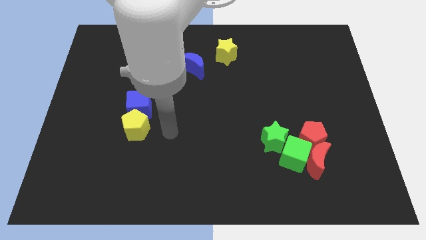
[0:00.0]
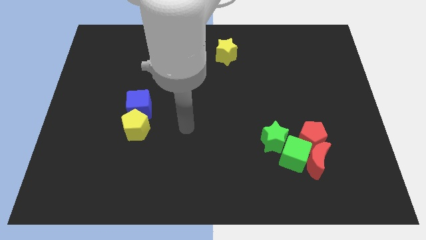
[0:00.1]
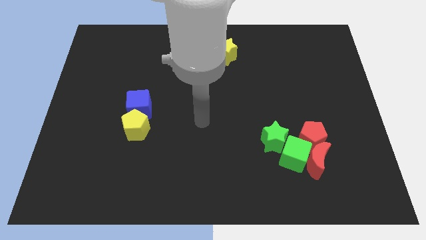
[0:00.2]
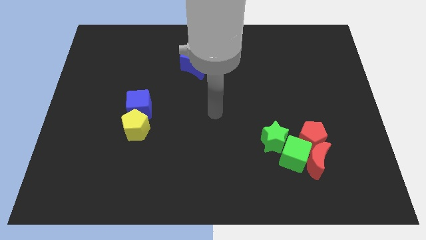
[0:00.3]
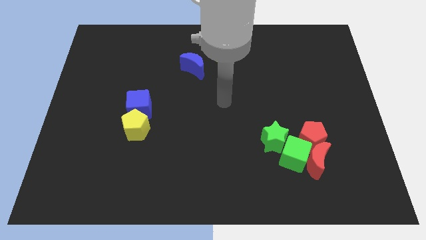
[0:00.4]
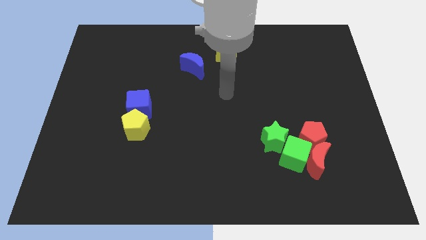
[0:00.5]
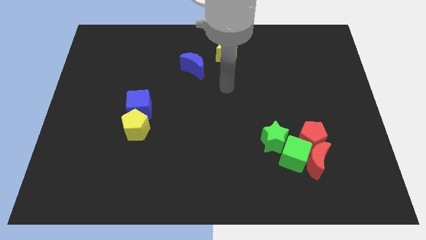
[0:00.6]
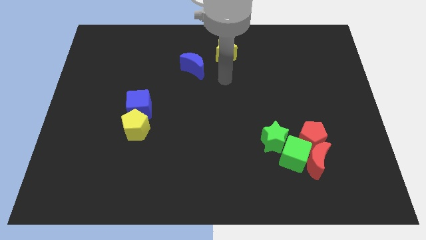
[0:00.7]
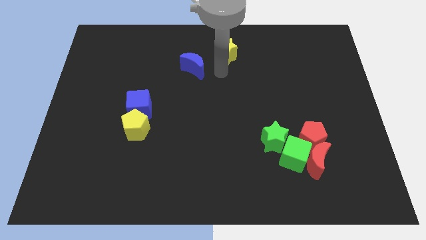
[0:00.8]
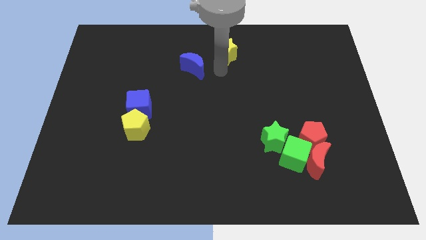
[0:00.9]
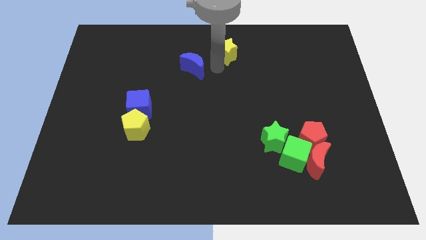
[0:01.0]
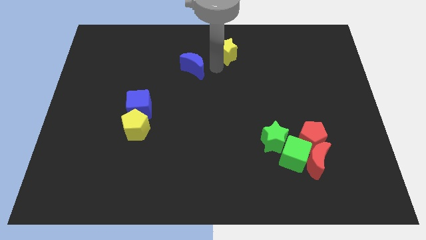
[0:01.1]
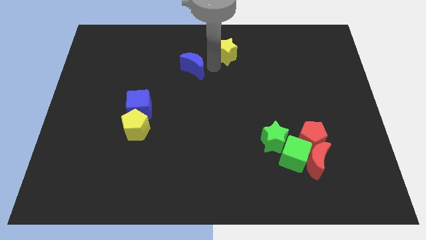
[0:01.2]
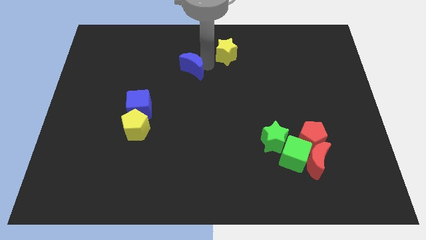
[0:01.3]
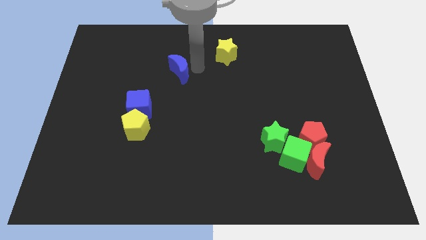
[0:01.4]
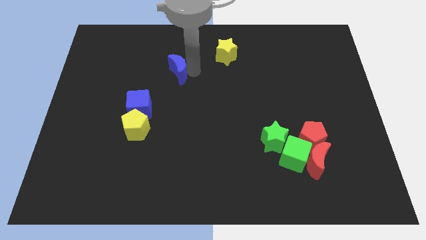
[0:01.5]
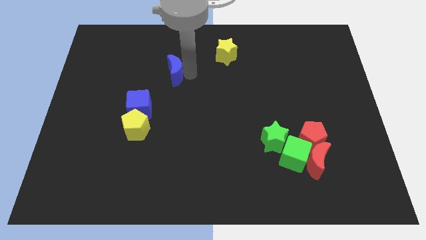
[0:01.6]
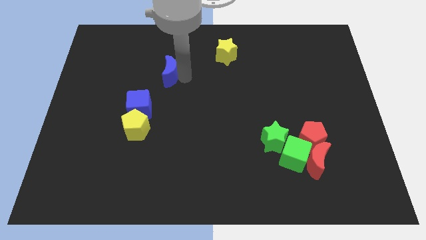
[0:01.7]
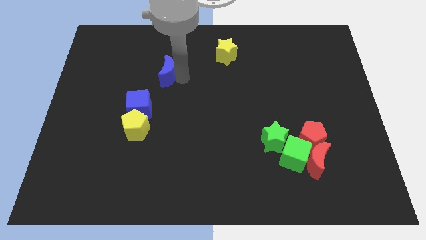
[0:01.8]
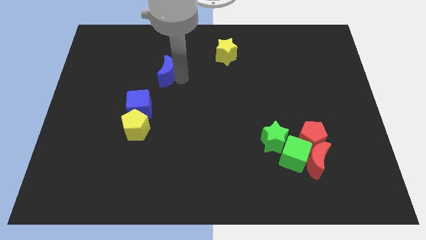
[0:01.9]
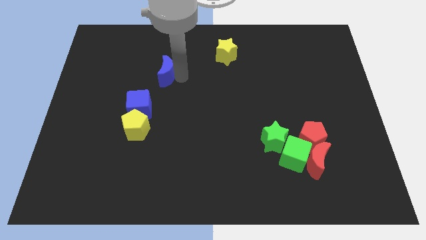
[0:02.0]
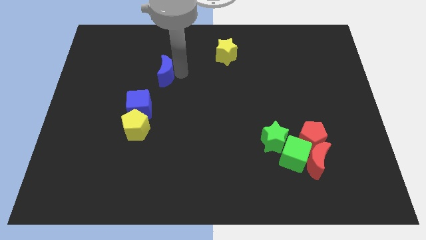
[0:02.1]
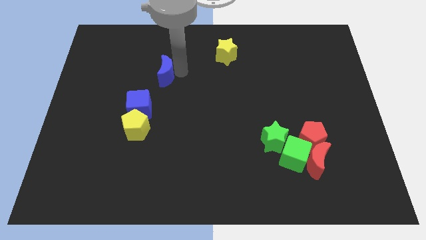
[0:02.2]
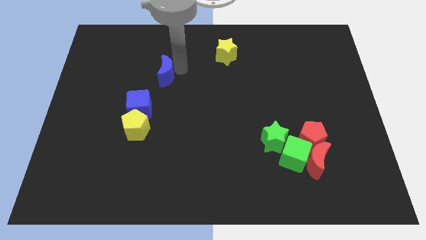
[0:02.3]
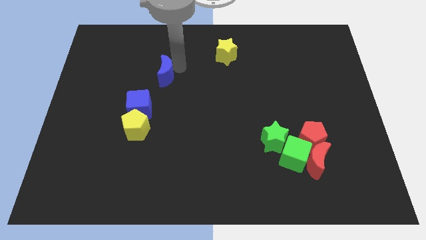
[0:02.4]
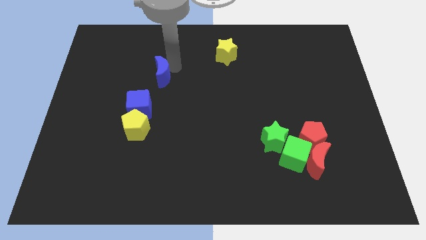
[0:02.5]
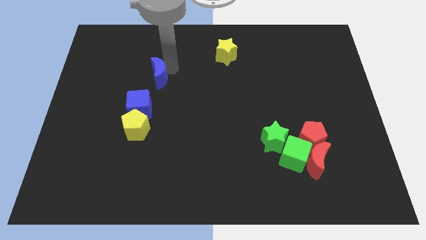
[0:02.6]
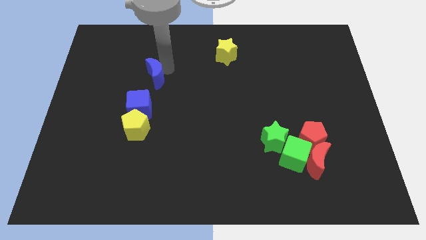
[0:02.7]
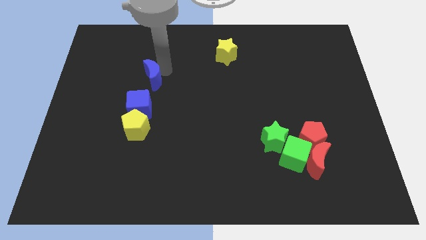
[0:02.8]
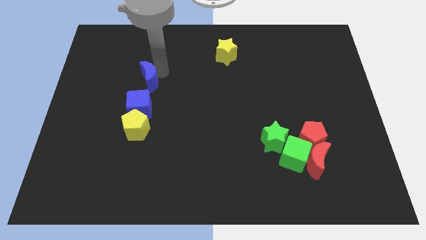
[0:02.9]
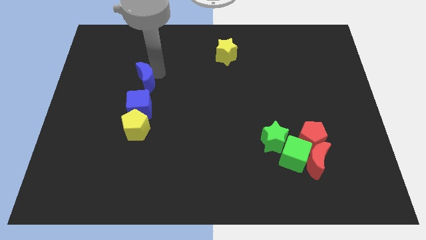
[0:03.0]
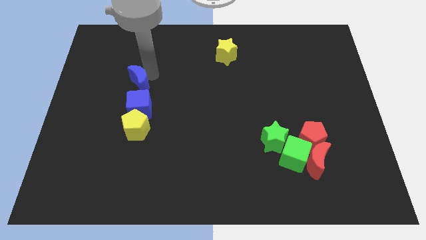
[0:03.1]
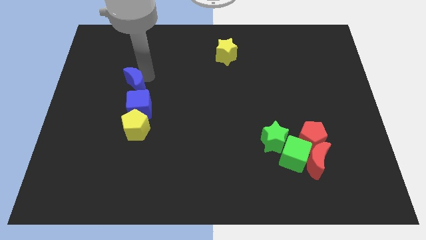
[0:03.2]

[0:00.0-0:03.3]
move the blue crescent above the blue cube

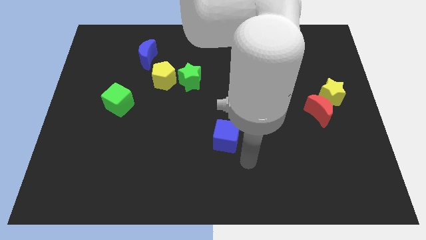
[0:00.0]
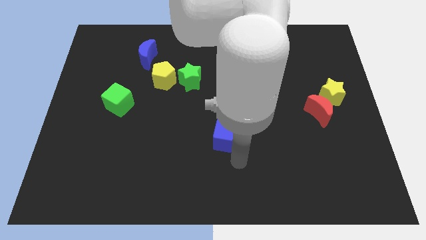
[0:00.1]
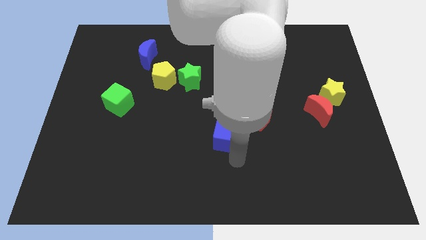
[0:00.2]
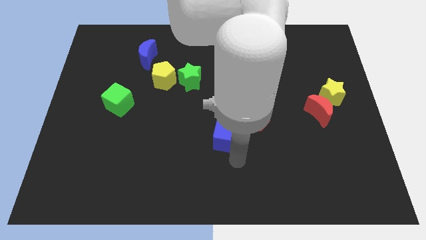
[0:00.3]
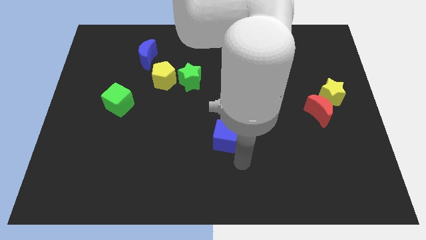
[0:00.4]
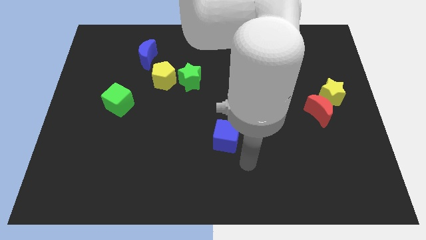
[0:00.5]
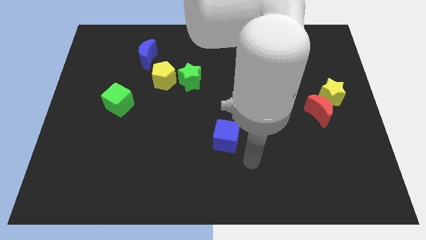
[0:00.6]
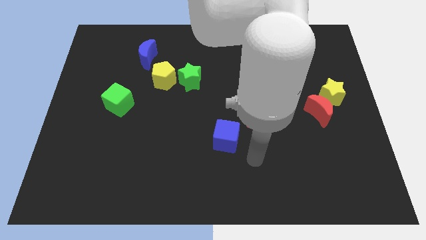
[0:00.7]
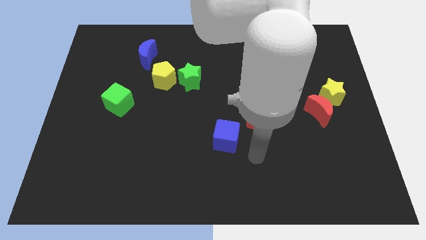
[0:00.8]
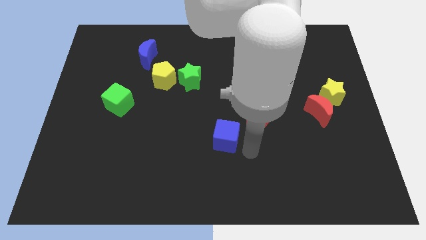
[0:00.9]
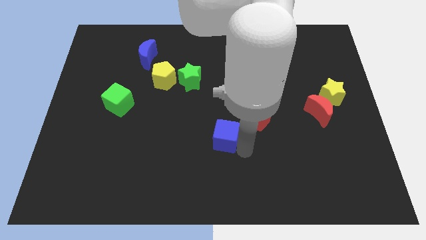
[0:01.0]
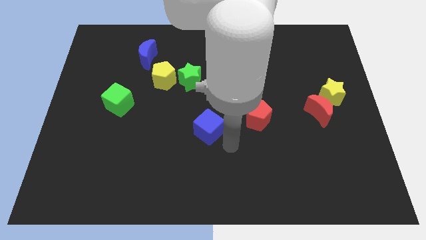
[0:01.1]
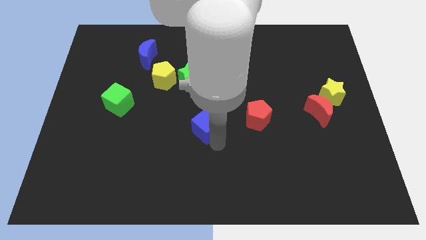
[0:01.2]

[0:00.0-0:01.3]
move blue cube slightly up

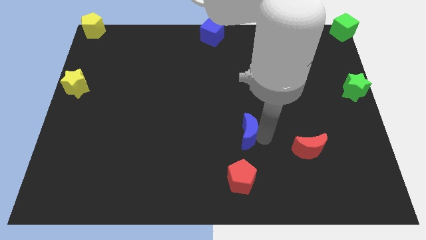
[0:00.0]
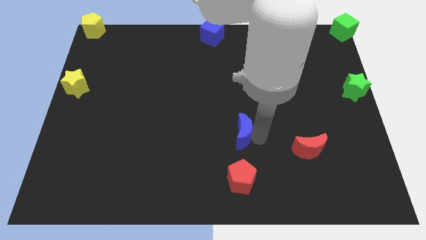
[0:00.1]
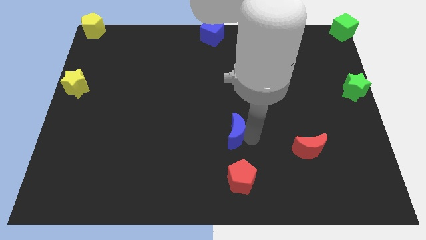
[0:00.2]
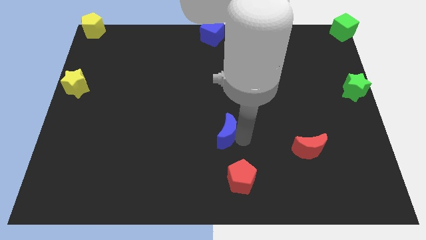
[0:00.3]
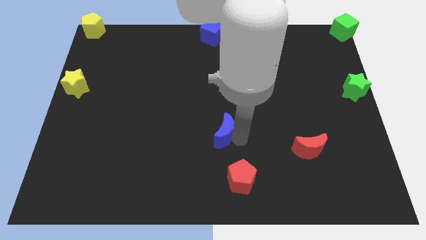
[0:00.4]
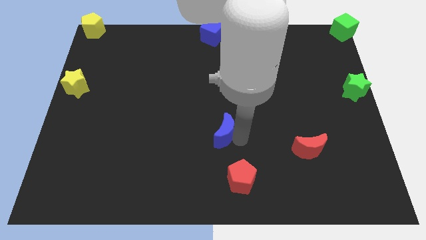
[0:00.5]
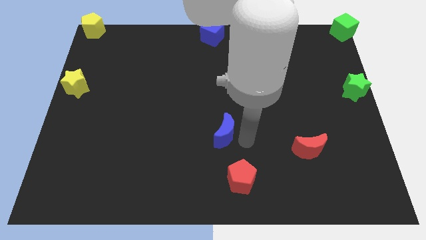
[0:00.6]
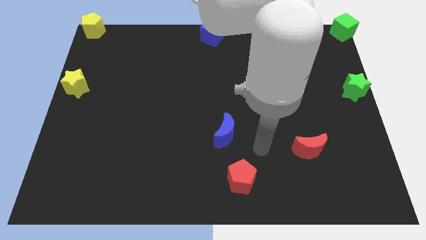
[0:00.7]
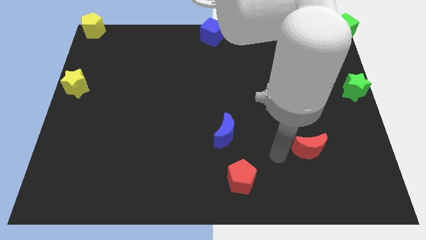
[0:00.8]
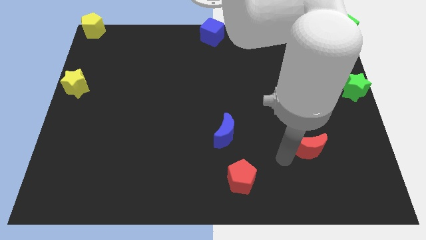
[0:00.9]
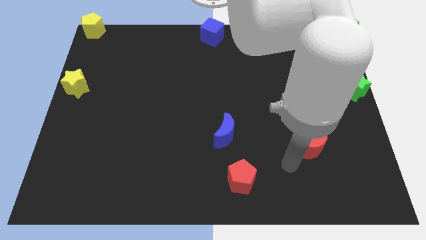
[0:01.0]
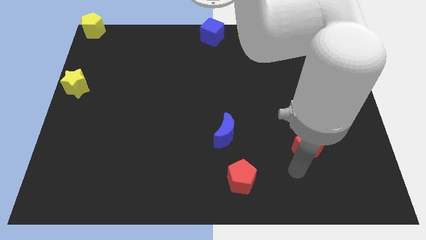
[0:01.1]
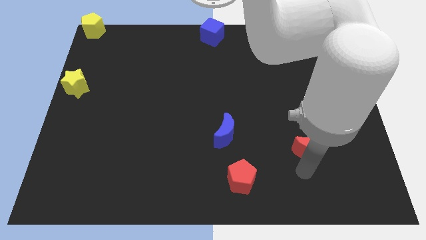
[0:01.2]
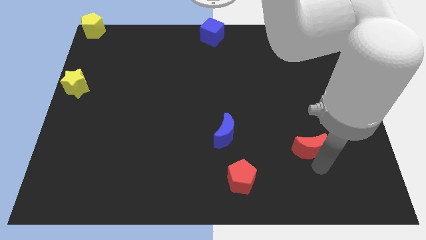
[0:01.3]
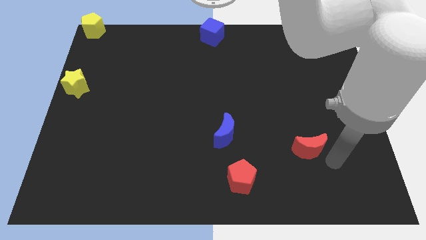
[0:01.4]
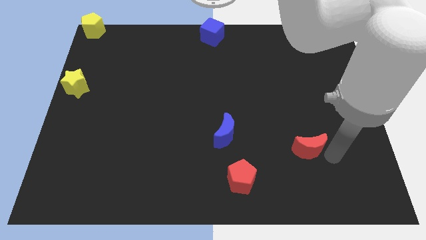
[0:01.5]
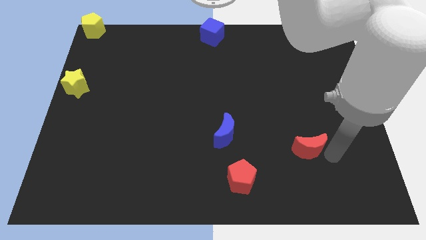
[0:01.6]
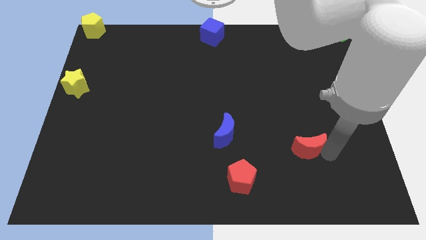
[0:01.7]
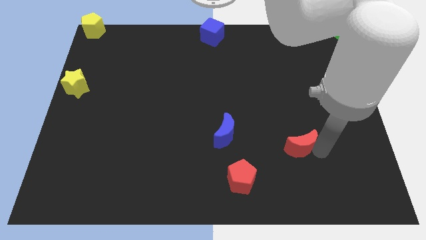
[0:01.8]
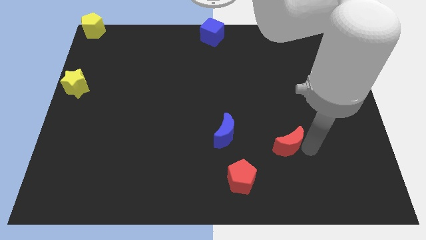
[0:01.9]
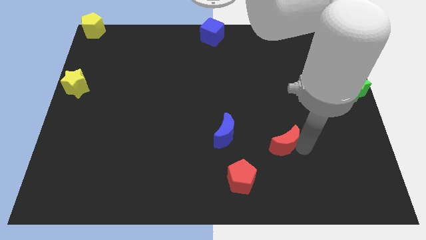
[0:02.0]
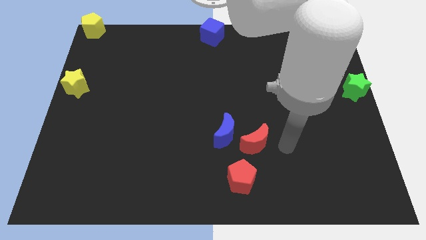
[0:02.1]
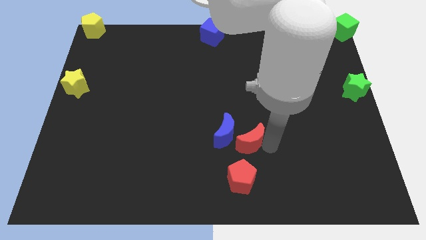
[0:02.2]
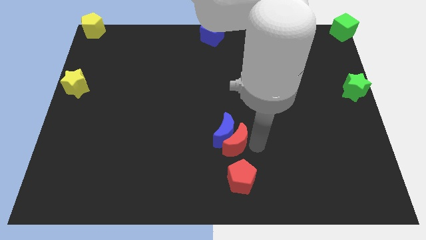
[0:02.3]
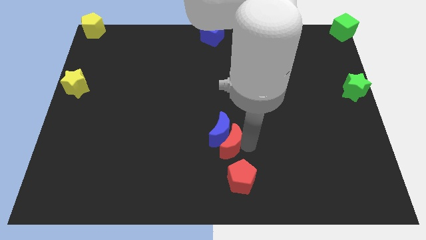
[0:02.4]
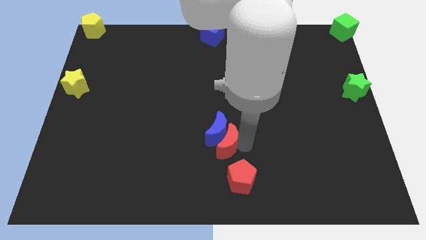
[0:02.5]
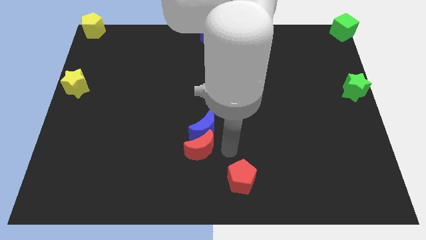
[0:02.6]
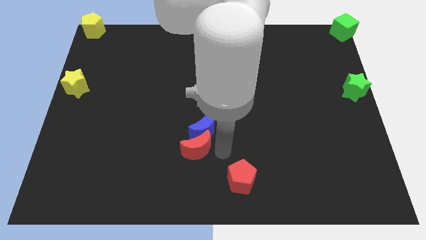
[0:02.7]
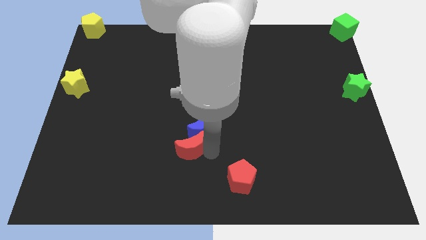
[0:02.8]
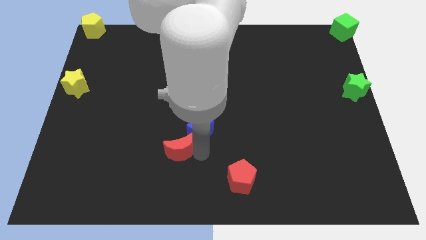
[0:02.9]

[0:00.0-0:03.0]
move the red moon close to the blue moon

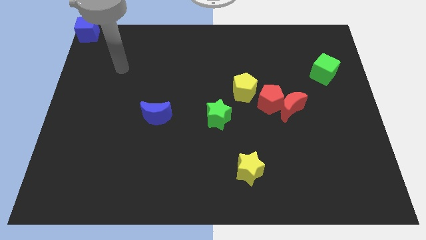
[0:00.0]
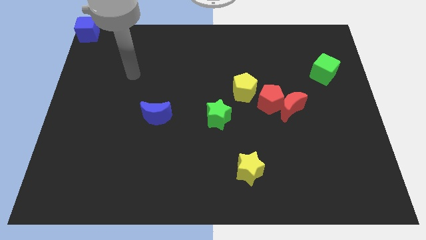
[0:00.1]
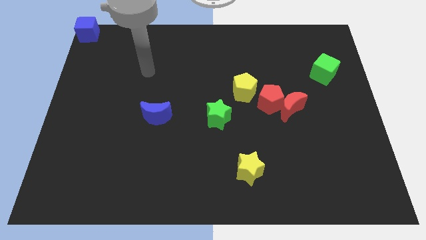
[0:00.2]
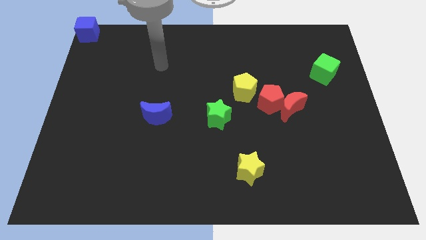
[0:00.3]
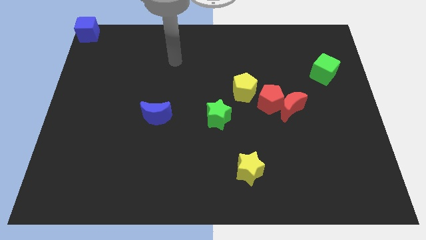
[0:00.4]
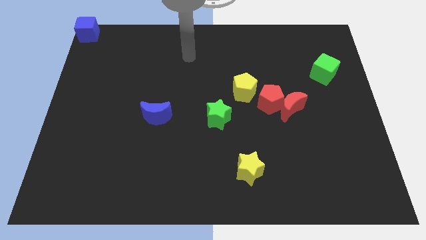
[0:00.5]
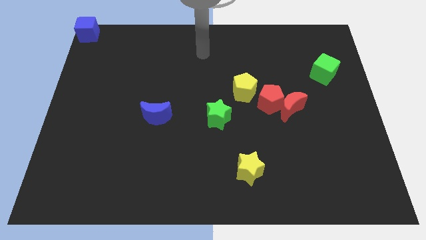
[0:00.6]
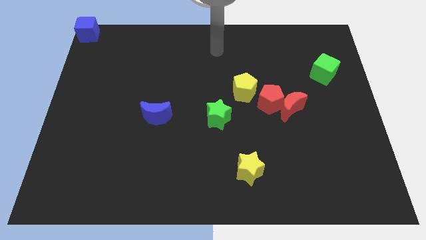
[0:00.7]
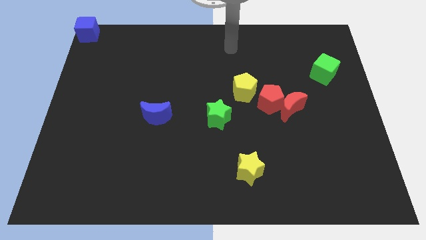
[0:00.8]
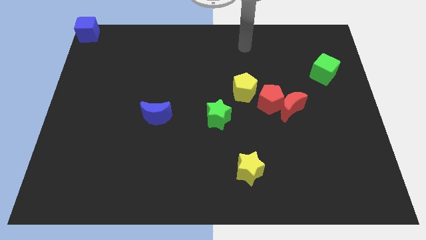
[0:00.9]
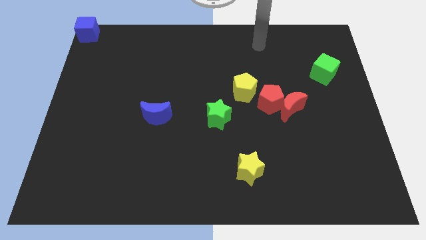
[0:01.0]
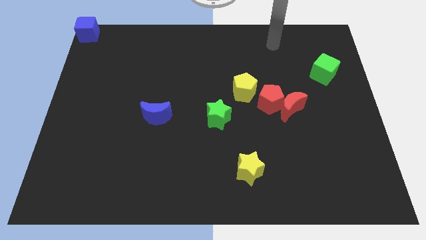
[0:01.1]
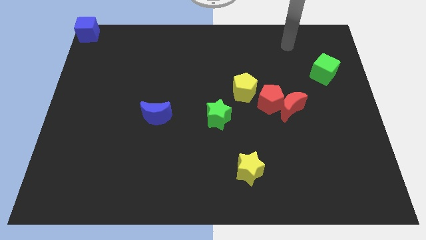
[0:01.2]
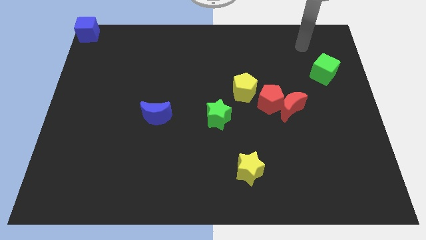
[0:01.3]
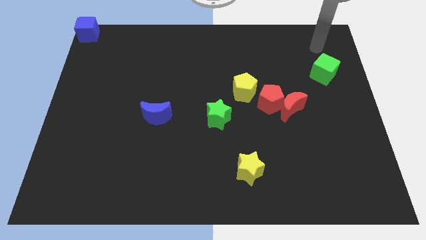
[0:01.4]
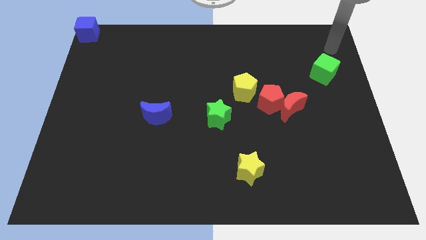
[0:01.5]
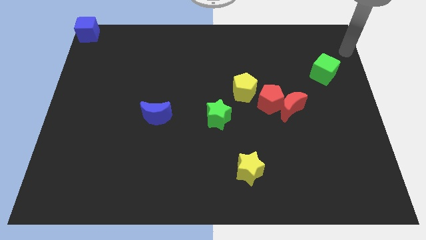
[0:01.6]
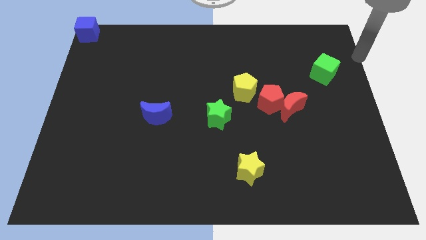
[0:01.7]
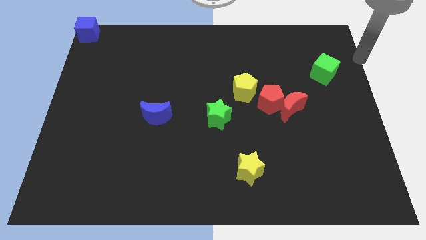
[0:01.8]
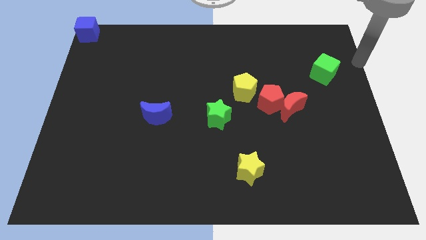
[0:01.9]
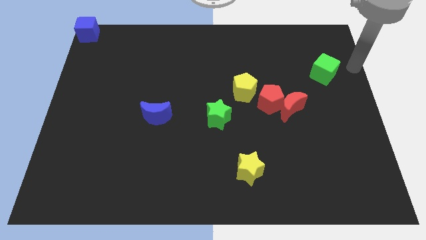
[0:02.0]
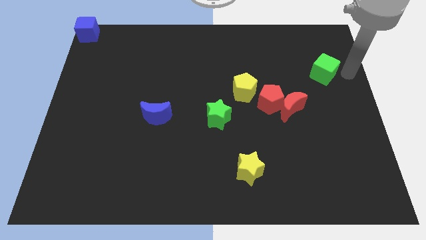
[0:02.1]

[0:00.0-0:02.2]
point the arm at the right of the green cube
